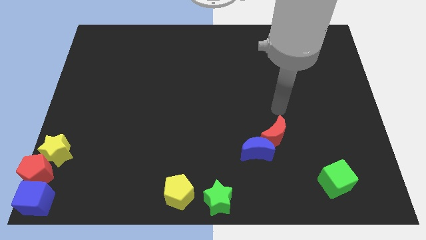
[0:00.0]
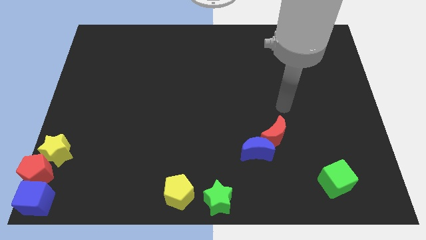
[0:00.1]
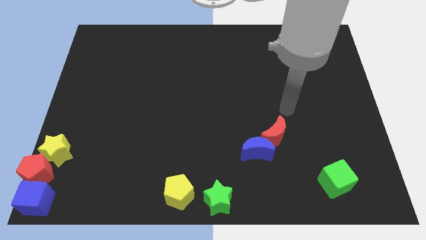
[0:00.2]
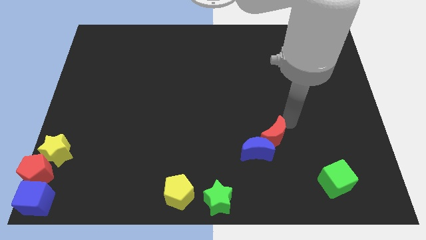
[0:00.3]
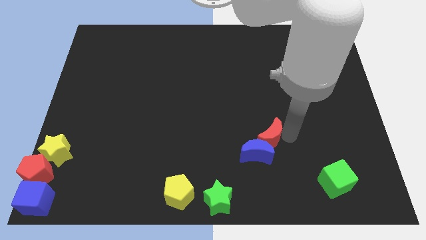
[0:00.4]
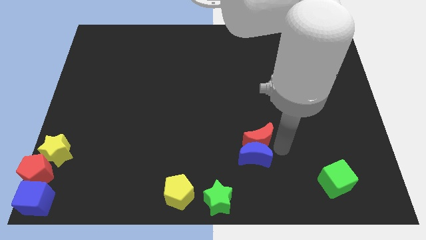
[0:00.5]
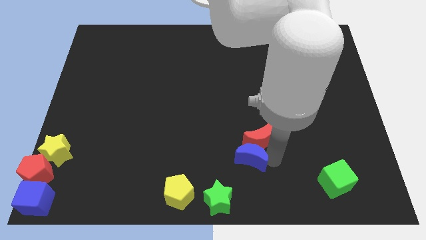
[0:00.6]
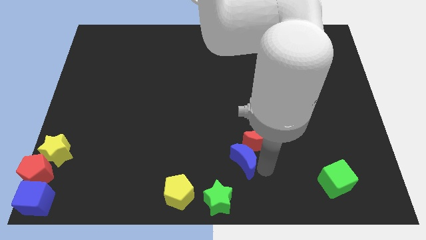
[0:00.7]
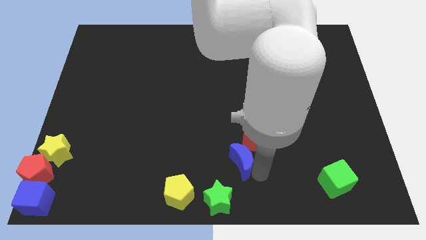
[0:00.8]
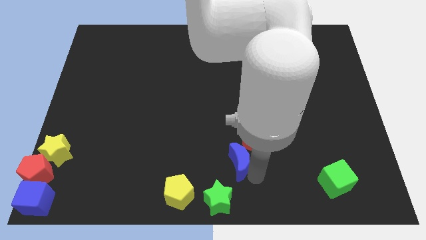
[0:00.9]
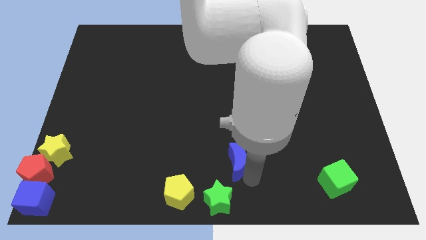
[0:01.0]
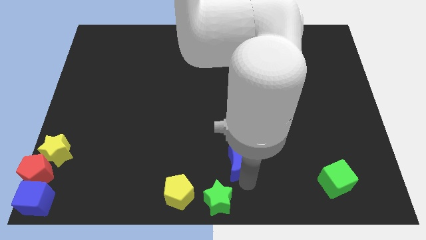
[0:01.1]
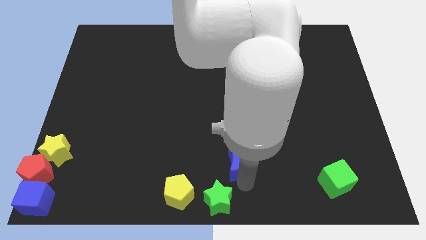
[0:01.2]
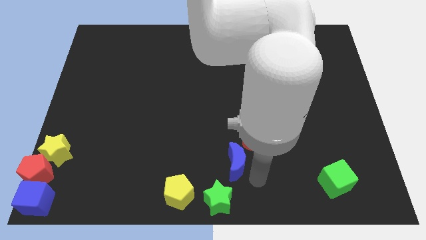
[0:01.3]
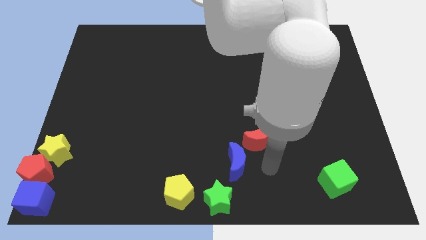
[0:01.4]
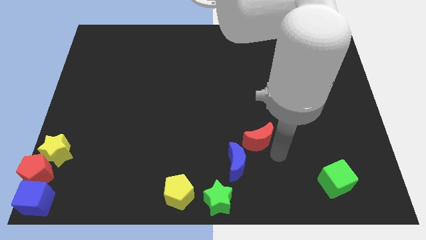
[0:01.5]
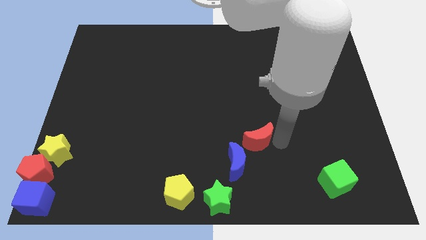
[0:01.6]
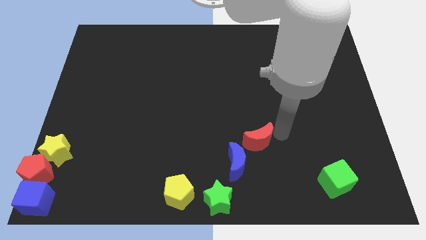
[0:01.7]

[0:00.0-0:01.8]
place the red crescent and the blue crescent diagonally above the top right side of the green star

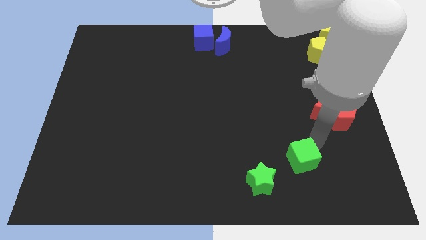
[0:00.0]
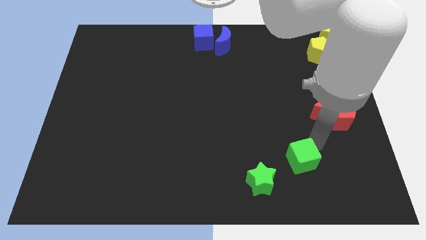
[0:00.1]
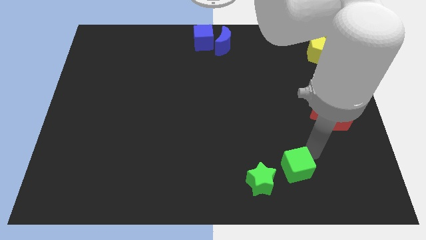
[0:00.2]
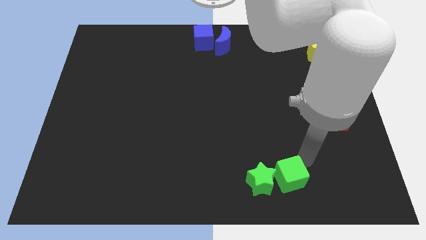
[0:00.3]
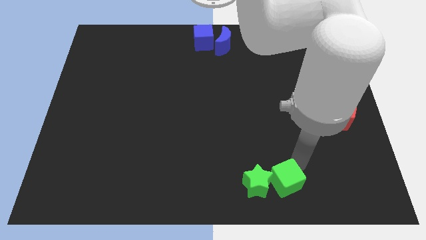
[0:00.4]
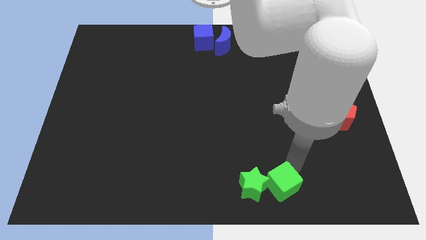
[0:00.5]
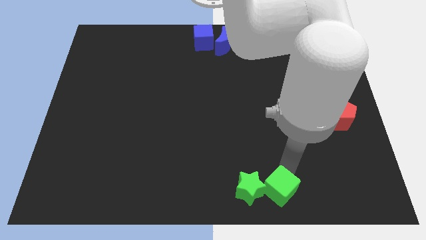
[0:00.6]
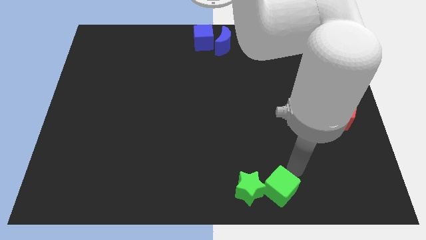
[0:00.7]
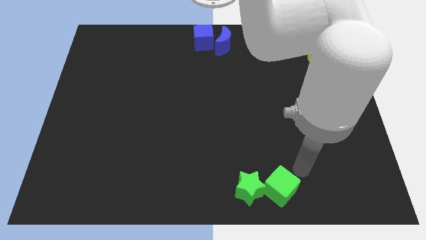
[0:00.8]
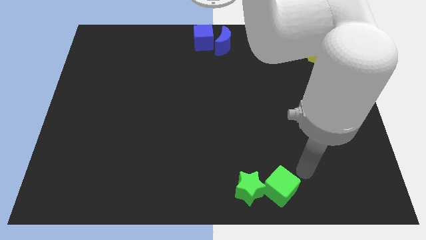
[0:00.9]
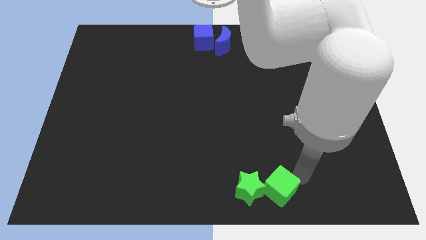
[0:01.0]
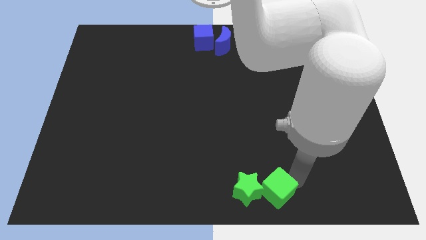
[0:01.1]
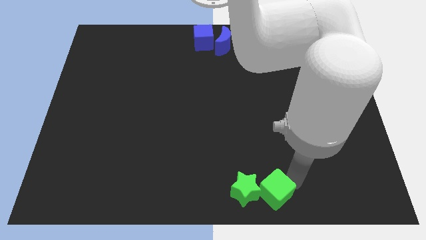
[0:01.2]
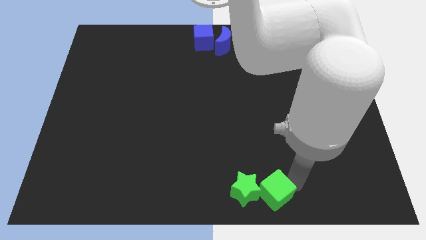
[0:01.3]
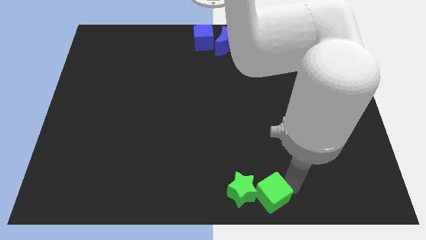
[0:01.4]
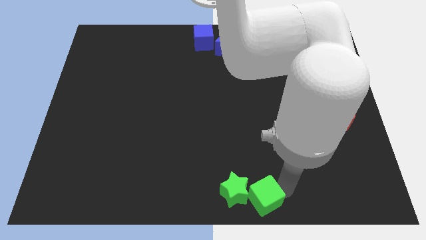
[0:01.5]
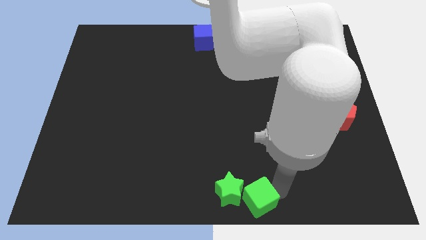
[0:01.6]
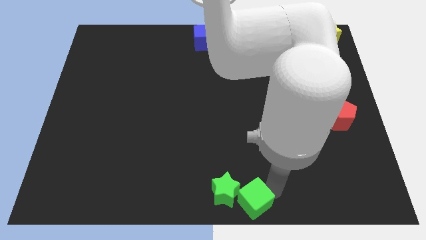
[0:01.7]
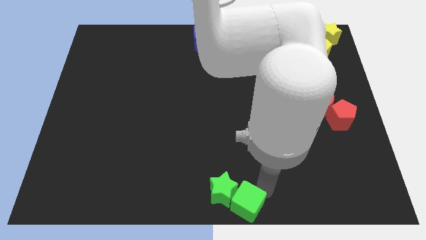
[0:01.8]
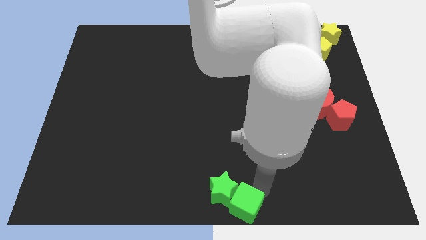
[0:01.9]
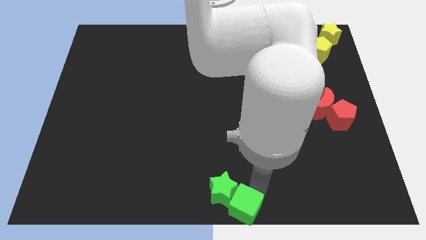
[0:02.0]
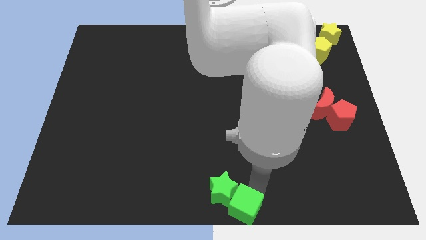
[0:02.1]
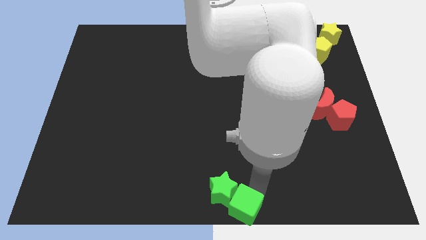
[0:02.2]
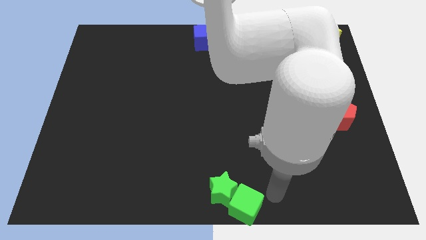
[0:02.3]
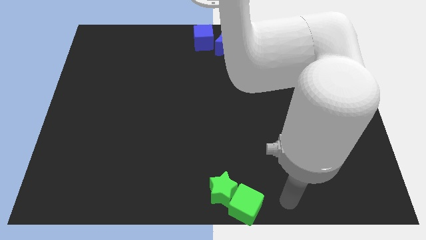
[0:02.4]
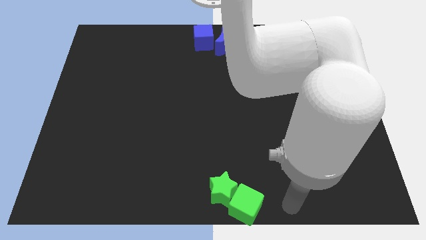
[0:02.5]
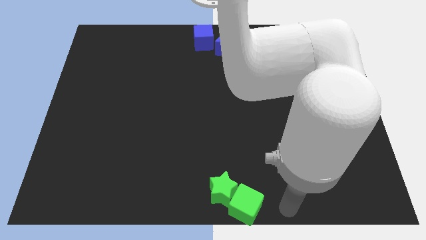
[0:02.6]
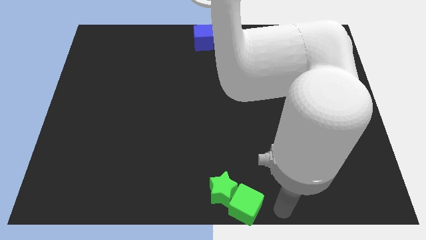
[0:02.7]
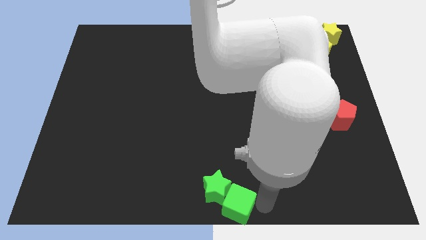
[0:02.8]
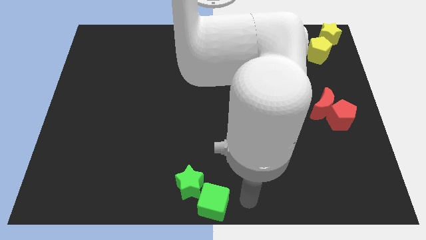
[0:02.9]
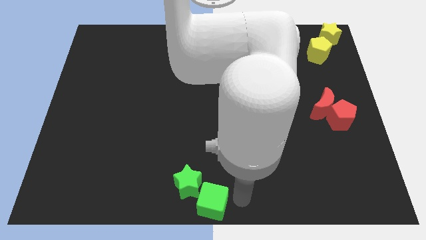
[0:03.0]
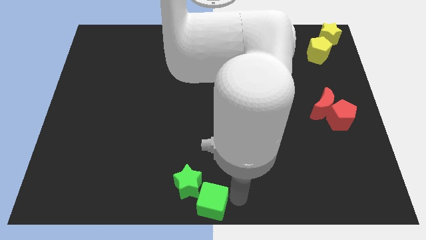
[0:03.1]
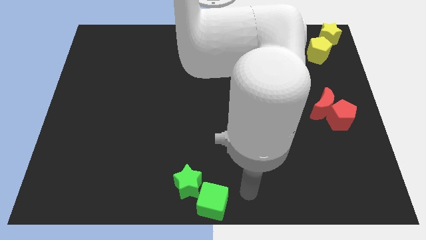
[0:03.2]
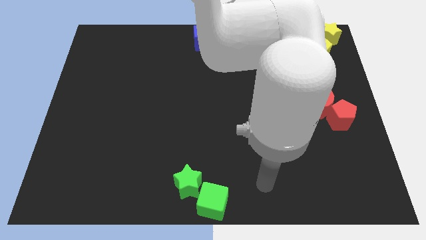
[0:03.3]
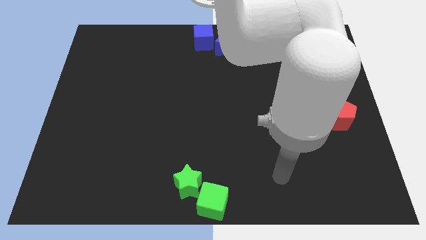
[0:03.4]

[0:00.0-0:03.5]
place the group of green blocks at the bottom center of the board

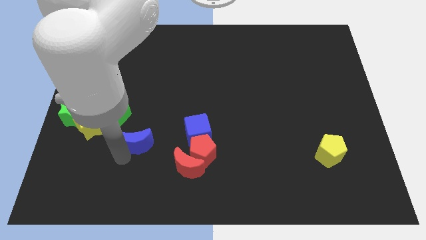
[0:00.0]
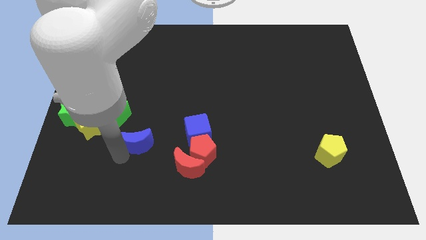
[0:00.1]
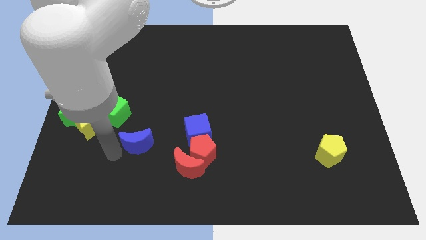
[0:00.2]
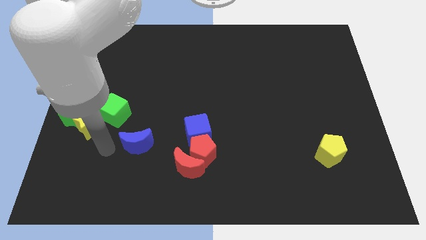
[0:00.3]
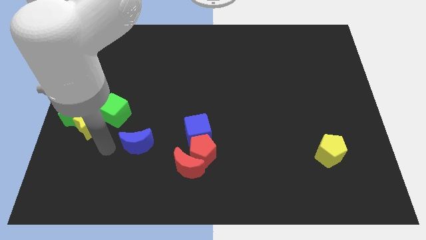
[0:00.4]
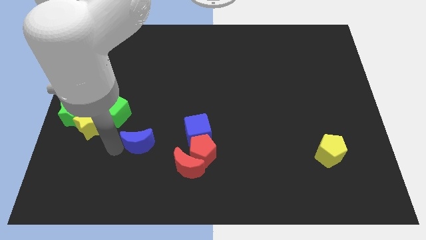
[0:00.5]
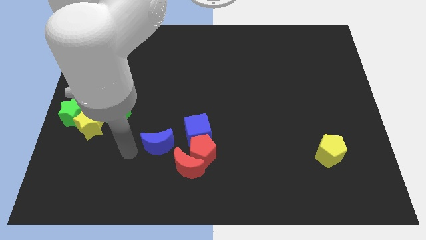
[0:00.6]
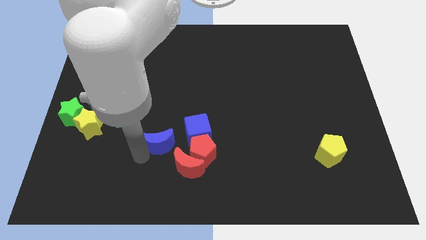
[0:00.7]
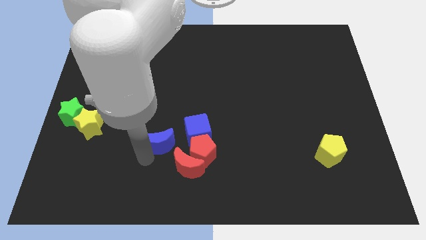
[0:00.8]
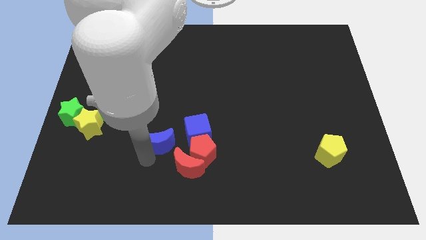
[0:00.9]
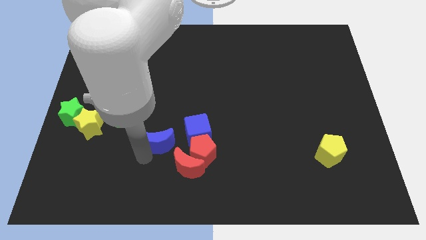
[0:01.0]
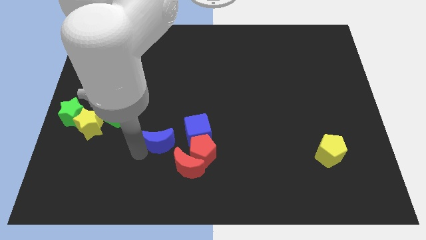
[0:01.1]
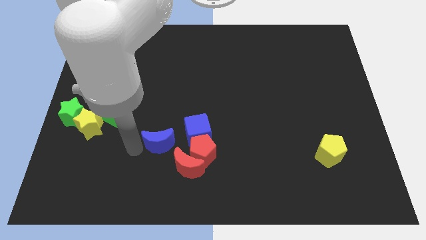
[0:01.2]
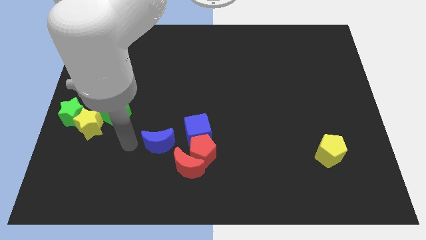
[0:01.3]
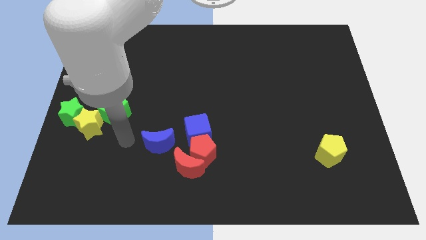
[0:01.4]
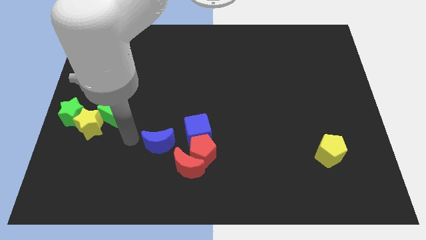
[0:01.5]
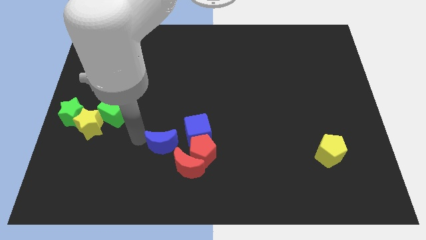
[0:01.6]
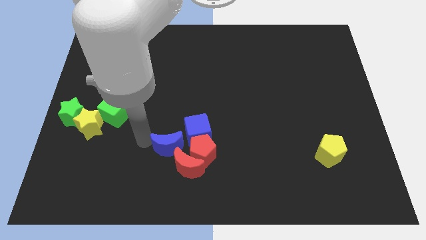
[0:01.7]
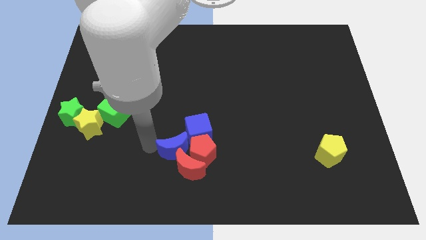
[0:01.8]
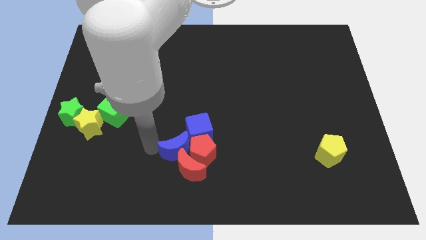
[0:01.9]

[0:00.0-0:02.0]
move the blue moon into the group of blocks

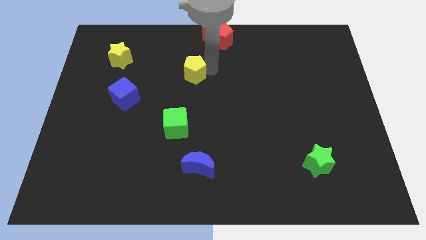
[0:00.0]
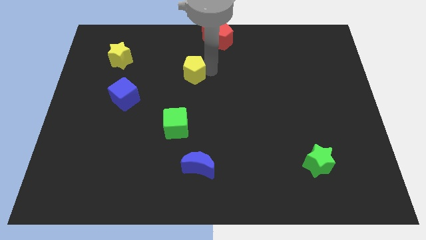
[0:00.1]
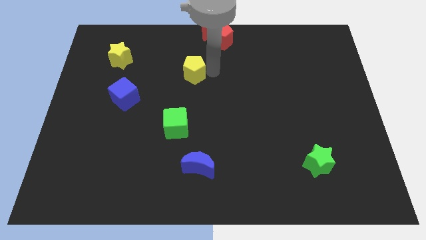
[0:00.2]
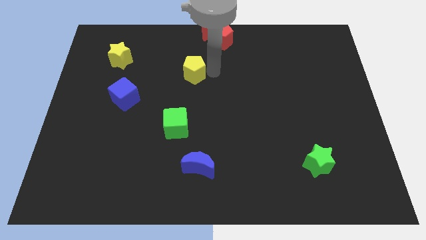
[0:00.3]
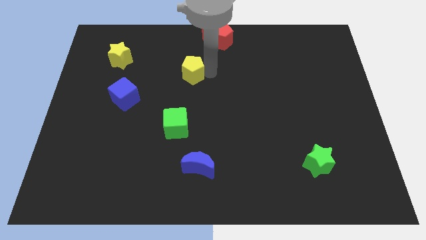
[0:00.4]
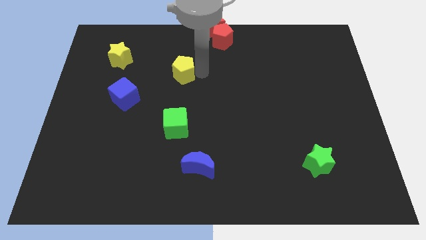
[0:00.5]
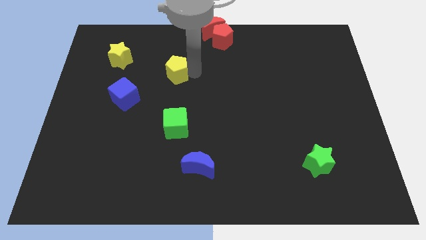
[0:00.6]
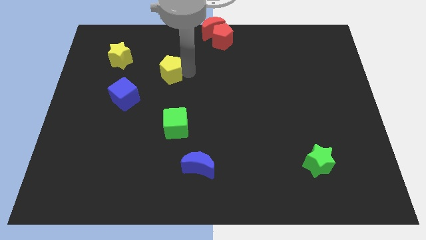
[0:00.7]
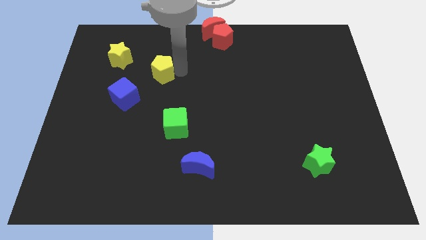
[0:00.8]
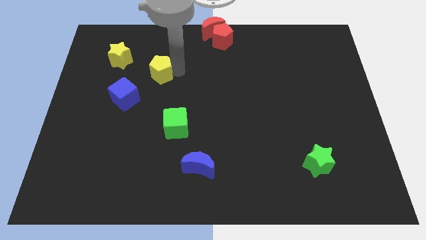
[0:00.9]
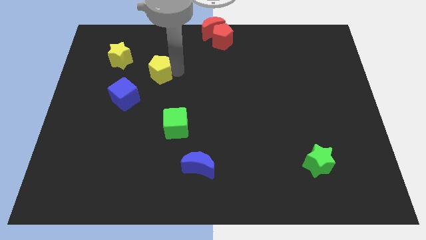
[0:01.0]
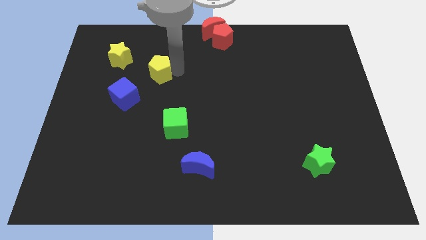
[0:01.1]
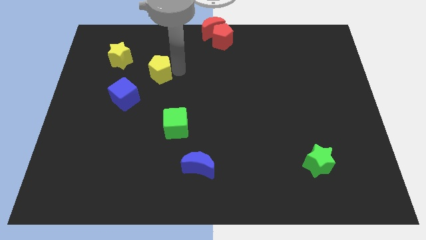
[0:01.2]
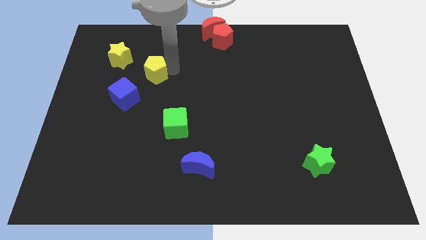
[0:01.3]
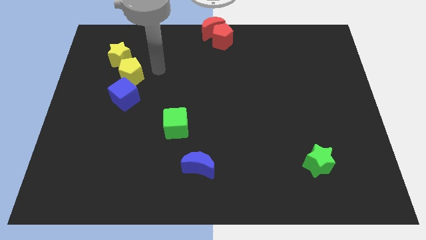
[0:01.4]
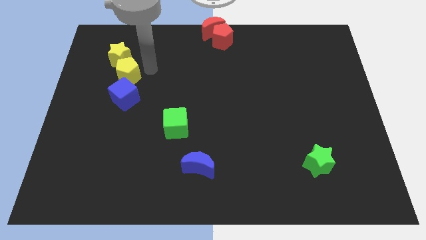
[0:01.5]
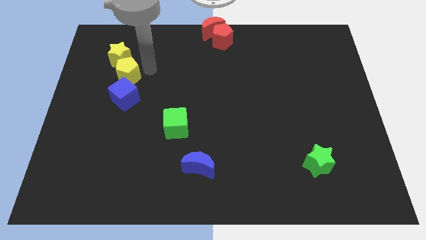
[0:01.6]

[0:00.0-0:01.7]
place yellow pentagon near yellow star
